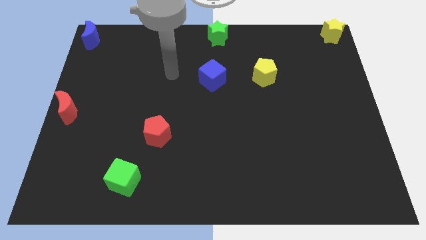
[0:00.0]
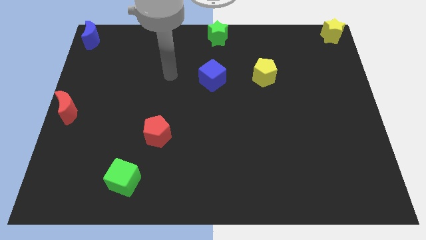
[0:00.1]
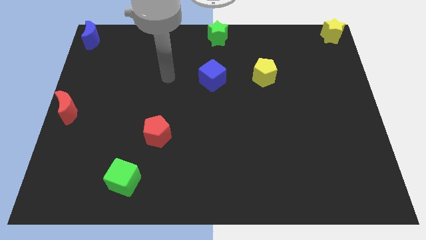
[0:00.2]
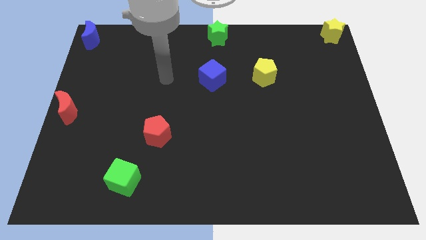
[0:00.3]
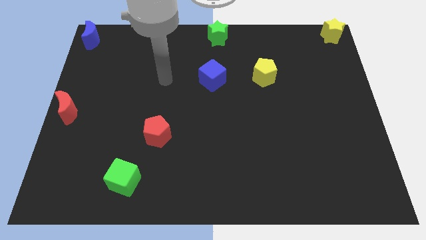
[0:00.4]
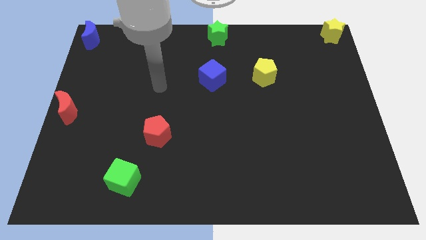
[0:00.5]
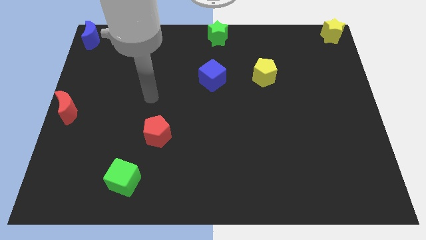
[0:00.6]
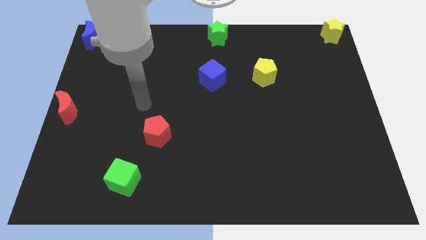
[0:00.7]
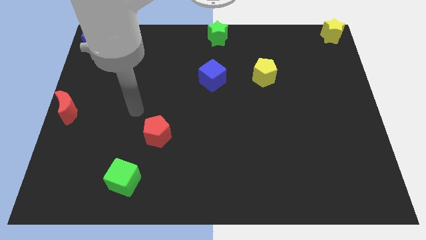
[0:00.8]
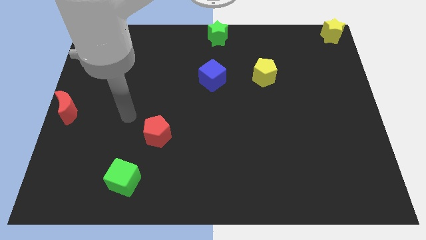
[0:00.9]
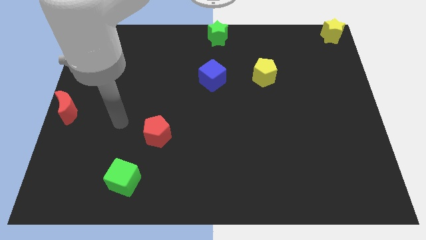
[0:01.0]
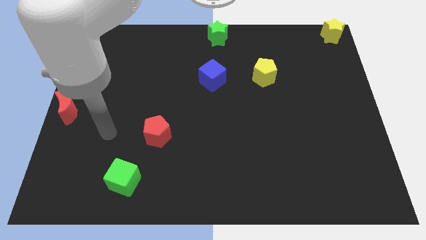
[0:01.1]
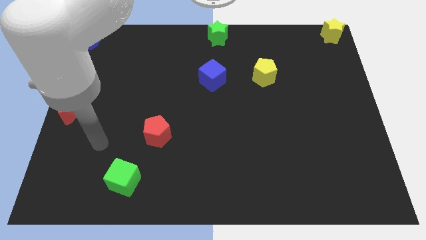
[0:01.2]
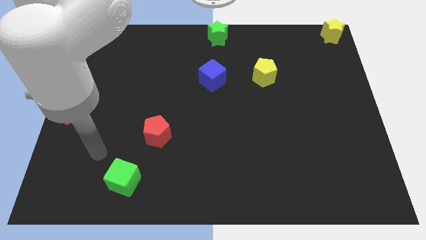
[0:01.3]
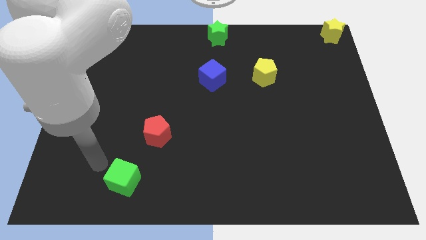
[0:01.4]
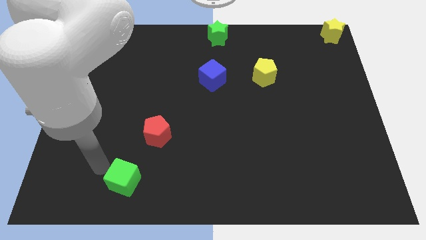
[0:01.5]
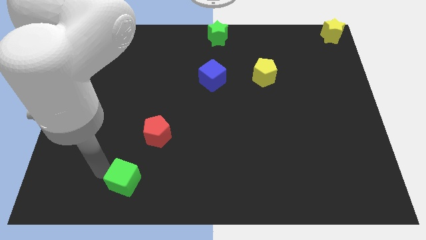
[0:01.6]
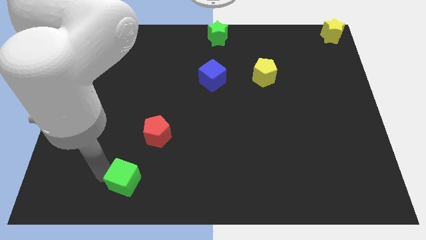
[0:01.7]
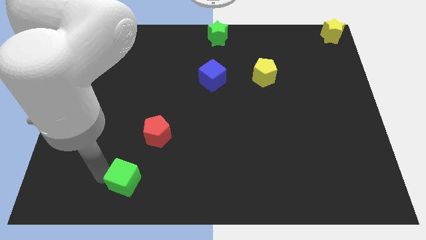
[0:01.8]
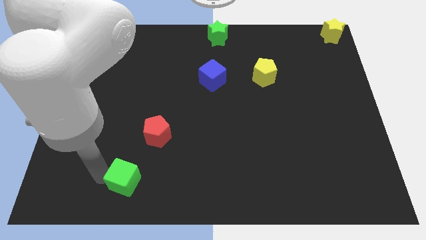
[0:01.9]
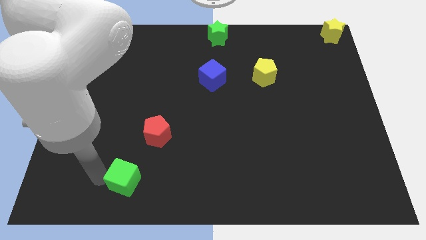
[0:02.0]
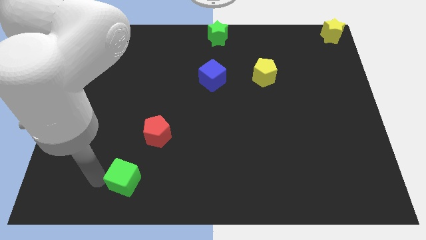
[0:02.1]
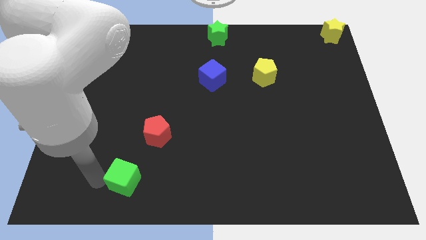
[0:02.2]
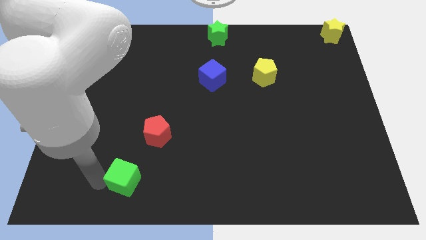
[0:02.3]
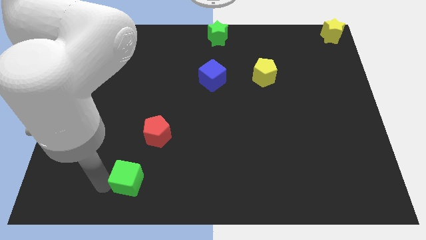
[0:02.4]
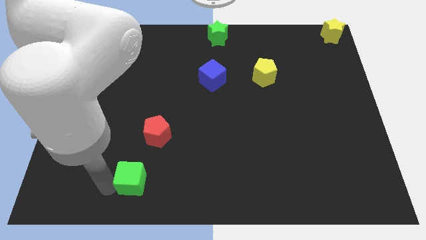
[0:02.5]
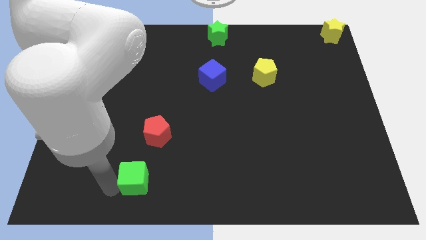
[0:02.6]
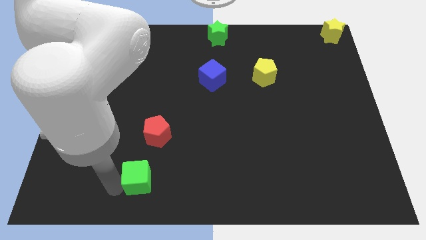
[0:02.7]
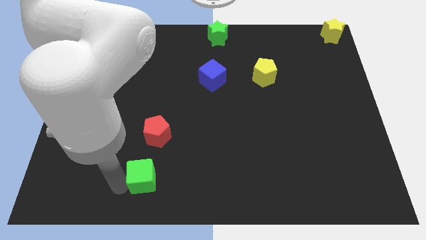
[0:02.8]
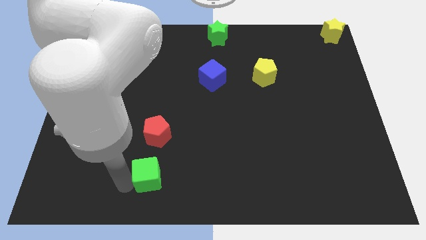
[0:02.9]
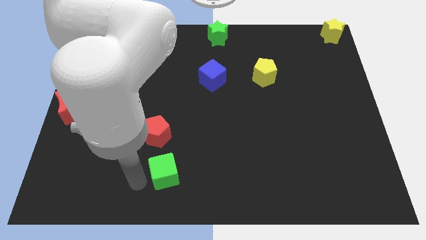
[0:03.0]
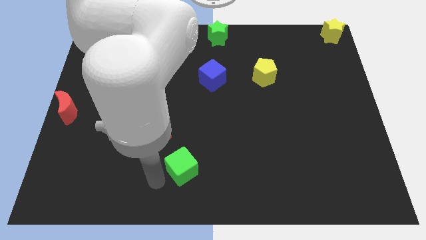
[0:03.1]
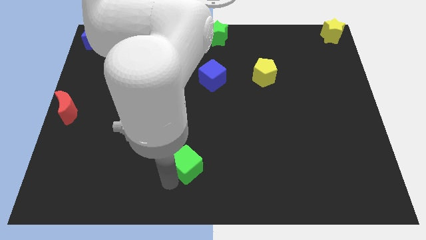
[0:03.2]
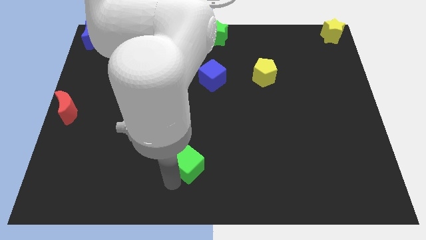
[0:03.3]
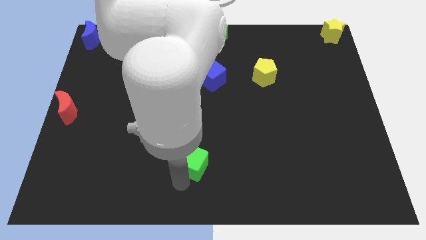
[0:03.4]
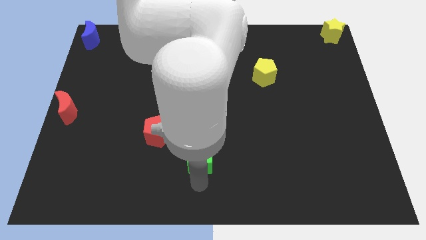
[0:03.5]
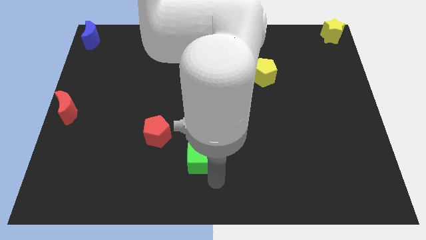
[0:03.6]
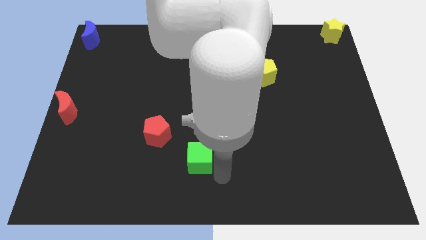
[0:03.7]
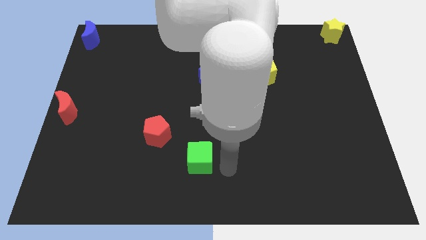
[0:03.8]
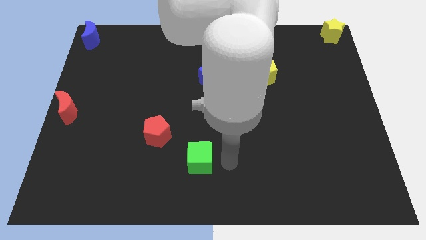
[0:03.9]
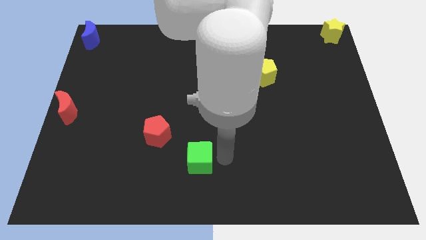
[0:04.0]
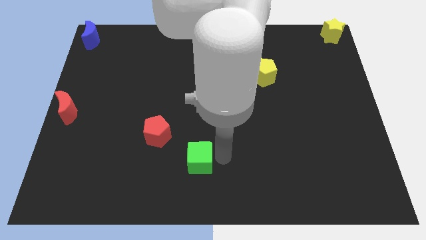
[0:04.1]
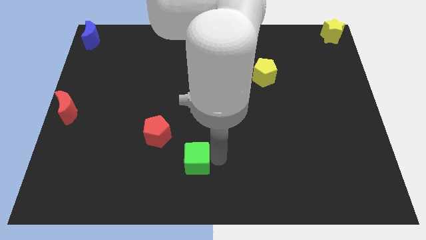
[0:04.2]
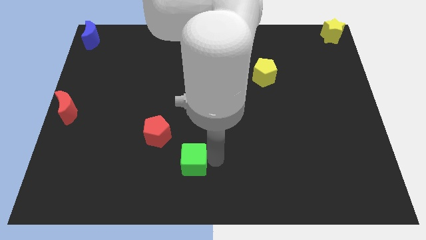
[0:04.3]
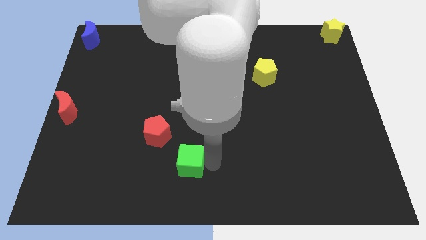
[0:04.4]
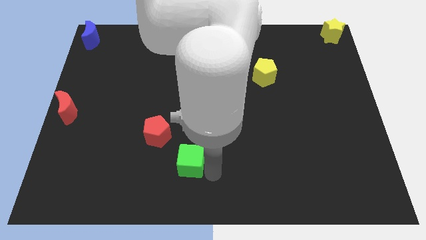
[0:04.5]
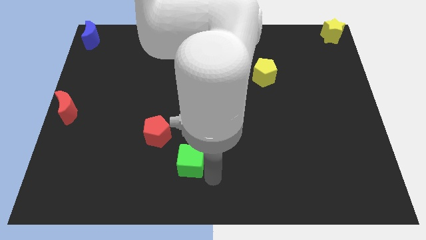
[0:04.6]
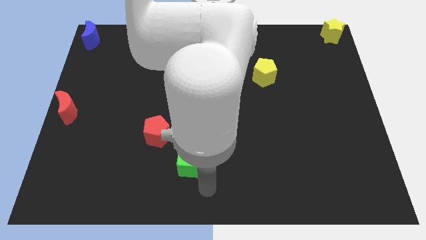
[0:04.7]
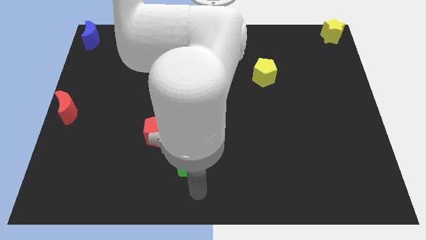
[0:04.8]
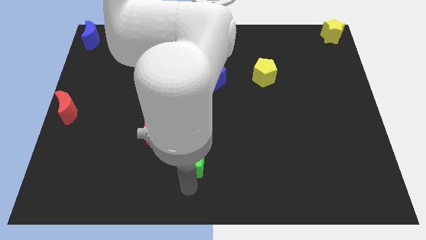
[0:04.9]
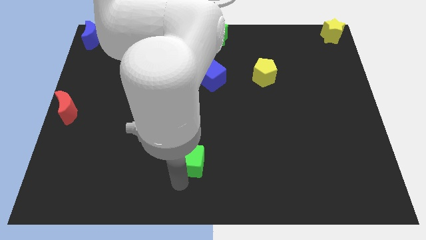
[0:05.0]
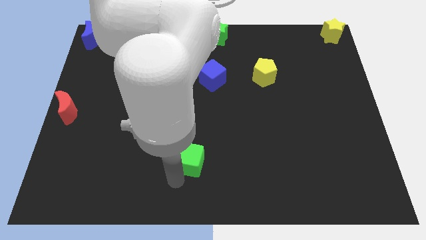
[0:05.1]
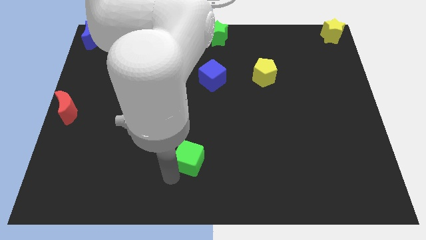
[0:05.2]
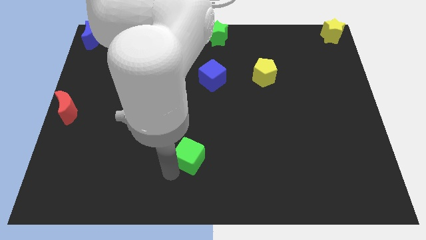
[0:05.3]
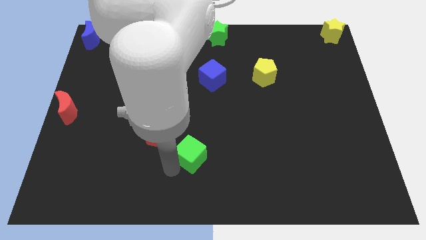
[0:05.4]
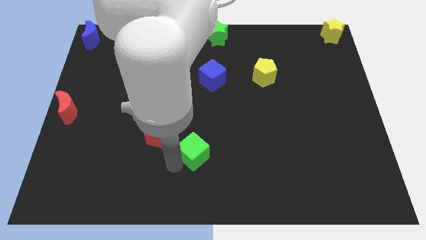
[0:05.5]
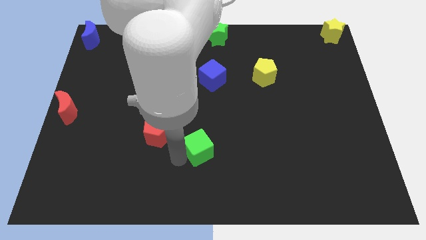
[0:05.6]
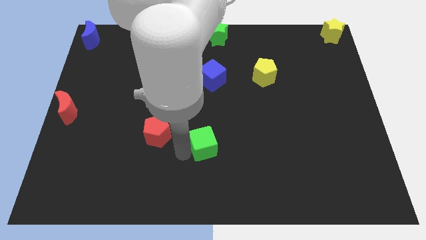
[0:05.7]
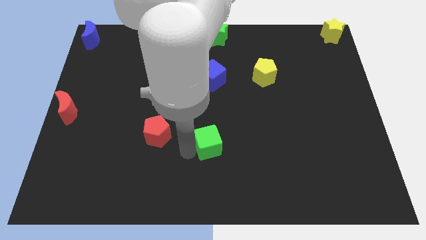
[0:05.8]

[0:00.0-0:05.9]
place the green cube vertical right to the red pentagon

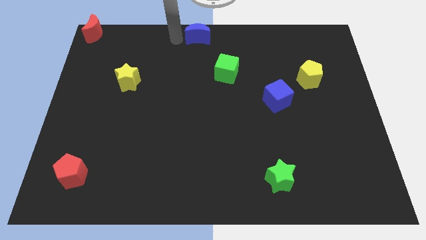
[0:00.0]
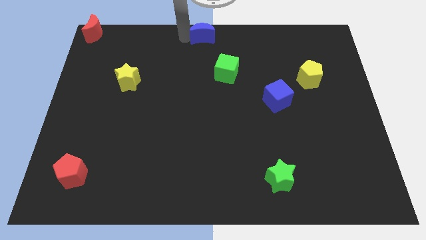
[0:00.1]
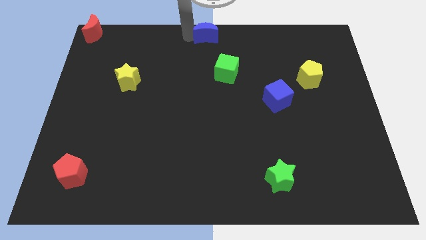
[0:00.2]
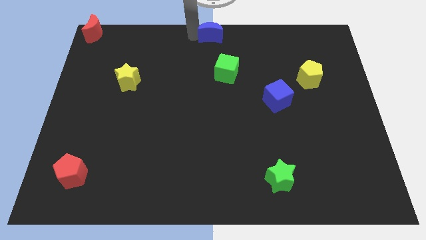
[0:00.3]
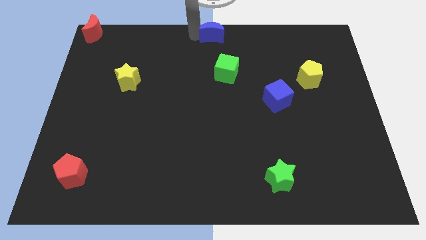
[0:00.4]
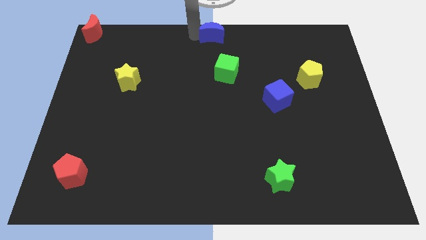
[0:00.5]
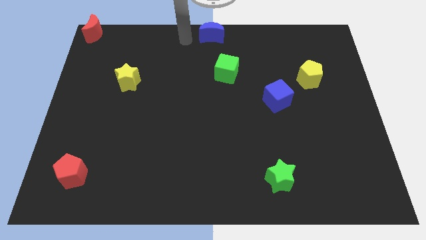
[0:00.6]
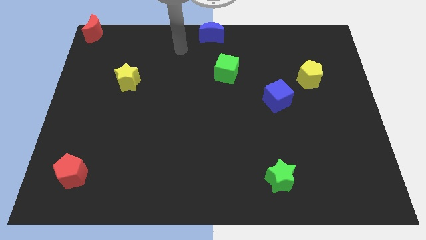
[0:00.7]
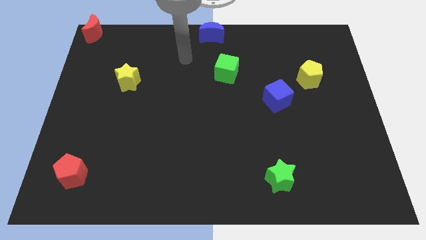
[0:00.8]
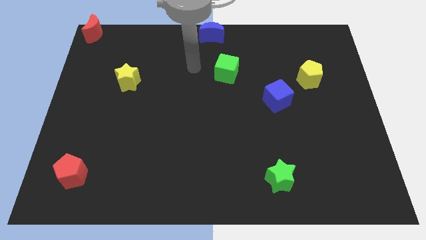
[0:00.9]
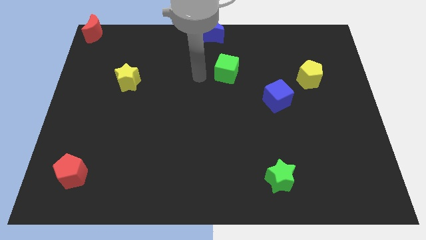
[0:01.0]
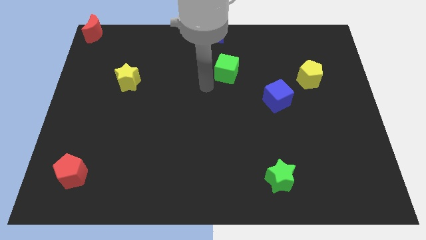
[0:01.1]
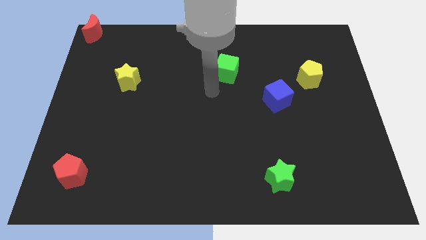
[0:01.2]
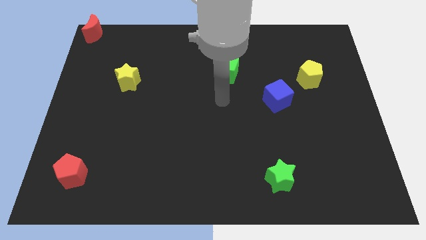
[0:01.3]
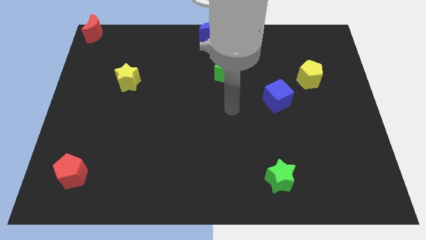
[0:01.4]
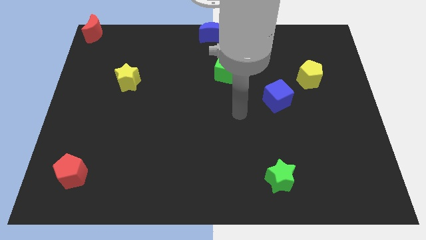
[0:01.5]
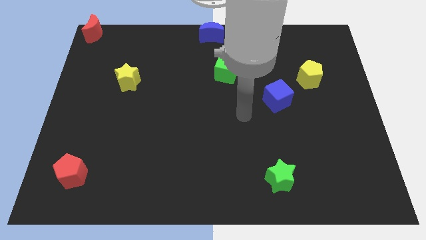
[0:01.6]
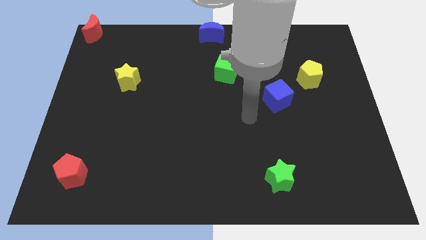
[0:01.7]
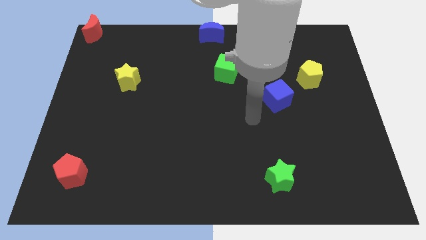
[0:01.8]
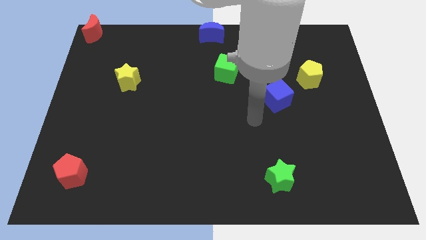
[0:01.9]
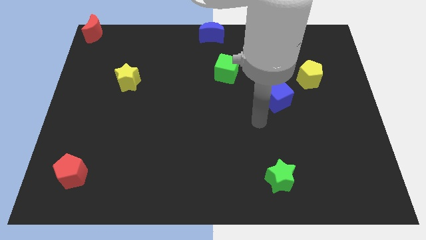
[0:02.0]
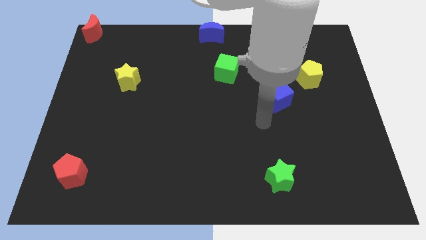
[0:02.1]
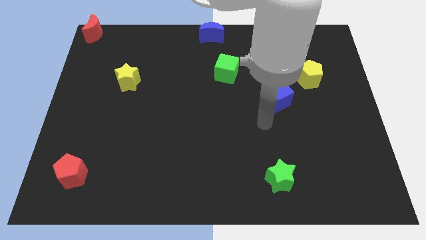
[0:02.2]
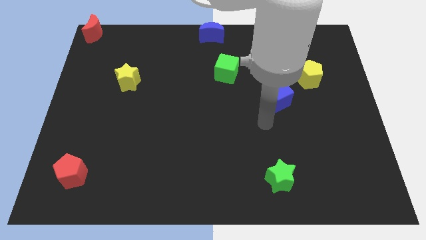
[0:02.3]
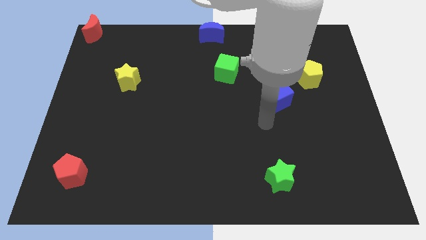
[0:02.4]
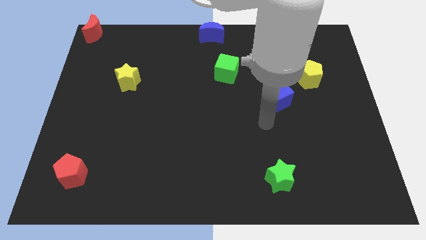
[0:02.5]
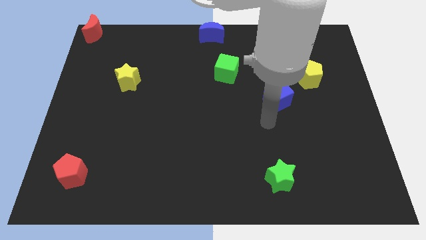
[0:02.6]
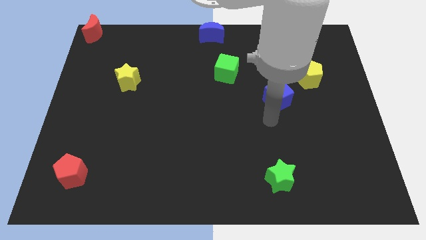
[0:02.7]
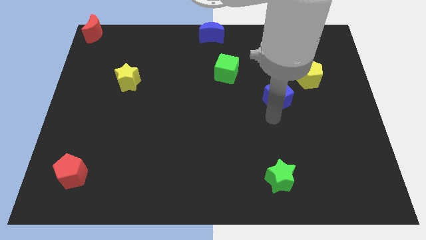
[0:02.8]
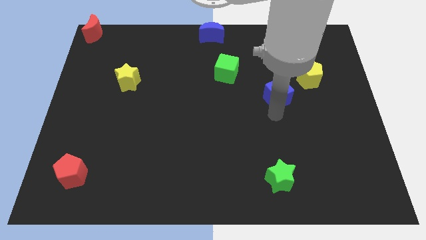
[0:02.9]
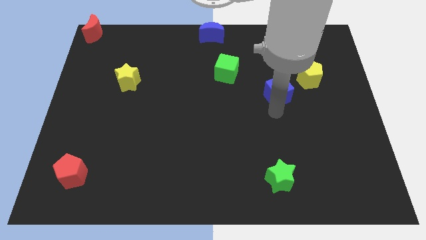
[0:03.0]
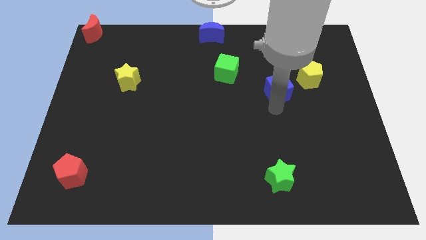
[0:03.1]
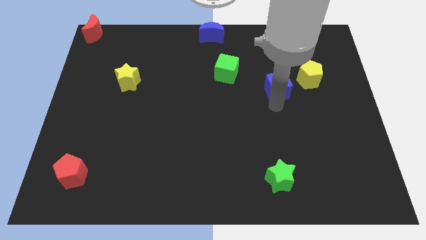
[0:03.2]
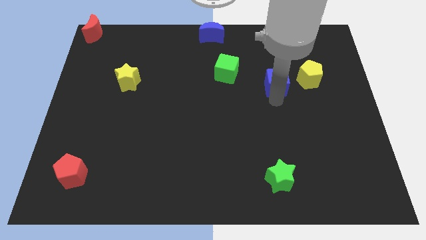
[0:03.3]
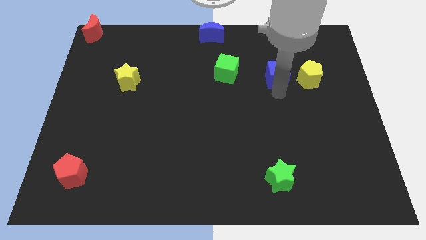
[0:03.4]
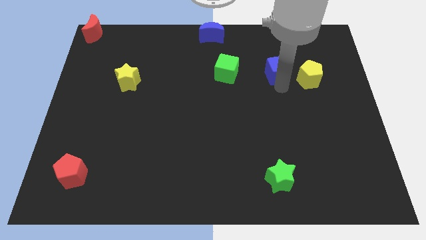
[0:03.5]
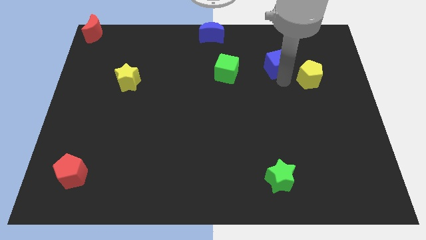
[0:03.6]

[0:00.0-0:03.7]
place the blue cube in between the yellow pentagon and the green cube
